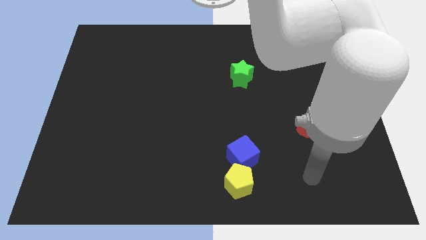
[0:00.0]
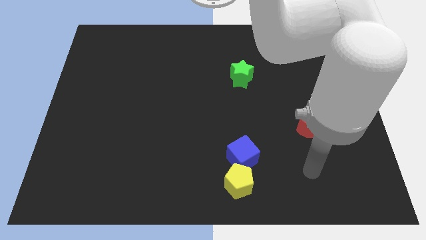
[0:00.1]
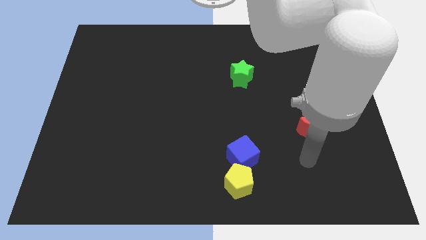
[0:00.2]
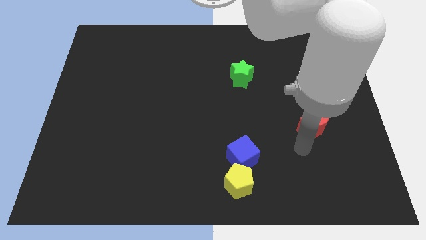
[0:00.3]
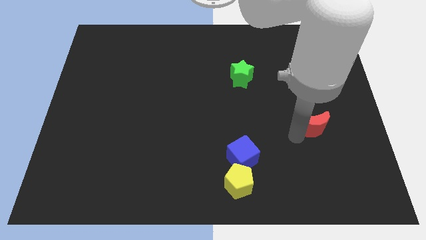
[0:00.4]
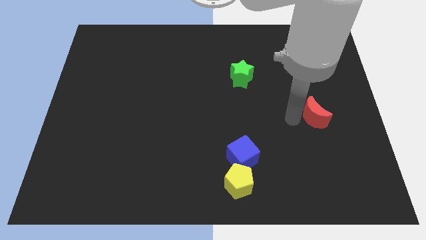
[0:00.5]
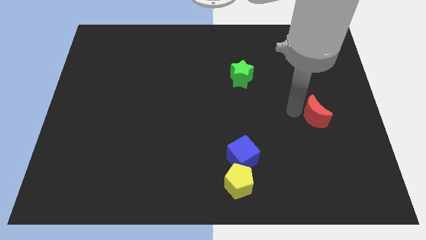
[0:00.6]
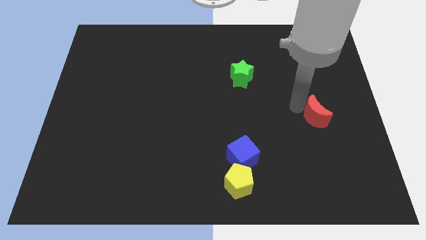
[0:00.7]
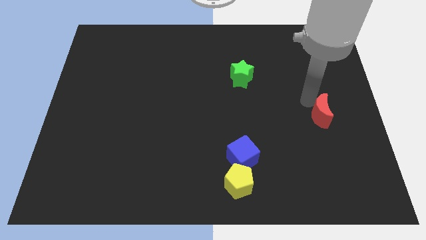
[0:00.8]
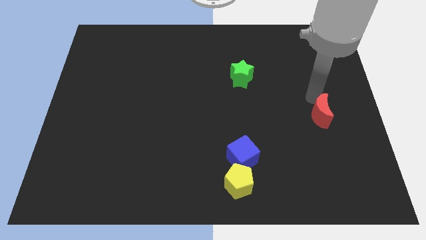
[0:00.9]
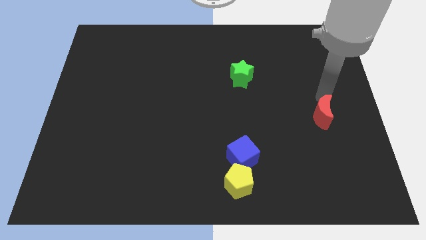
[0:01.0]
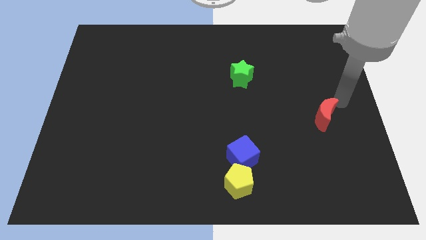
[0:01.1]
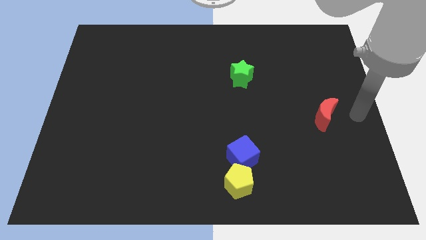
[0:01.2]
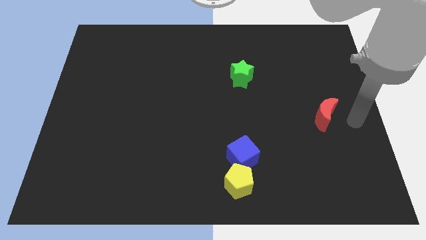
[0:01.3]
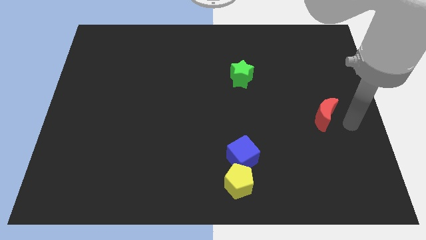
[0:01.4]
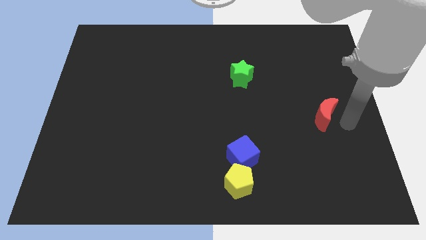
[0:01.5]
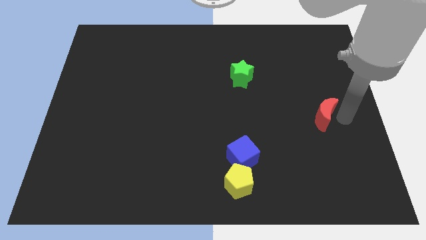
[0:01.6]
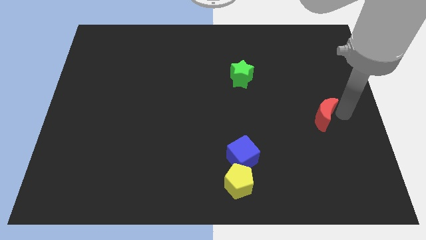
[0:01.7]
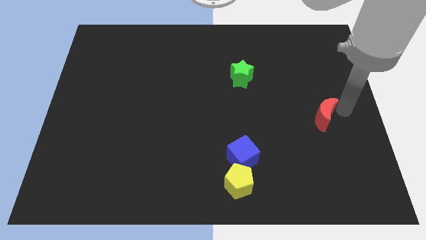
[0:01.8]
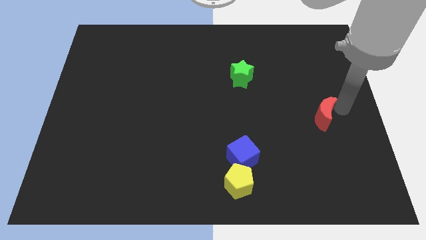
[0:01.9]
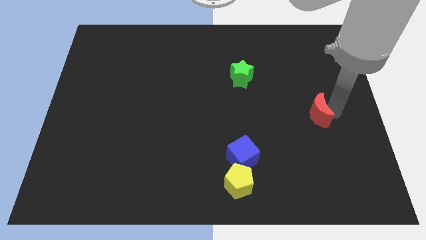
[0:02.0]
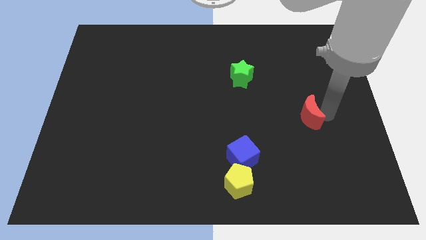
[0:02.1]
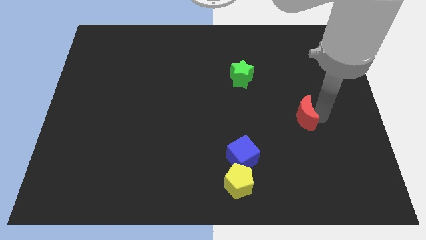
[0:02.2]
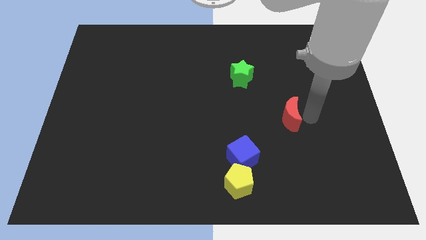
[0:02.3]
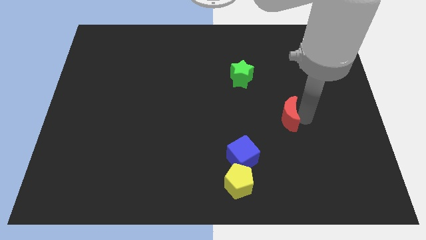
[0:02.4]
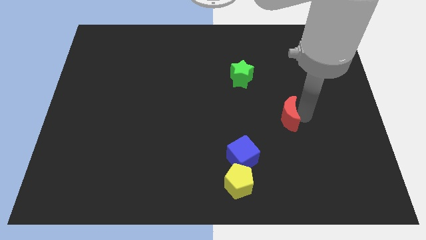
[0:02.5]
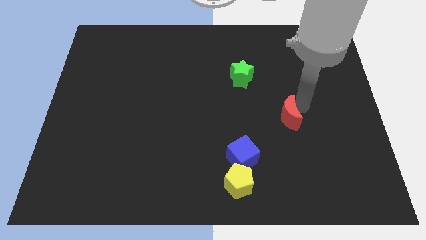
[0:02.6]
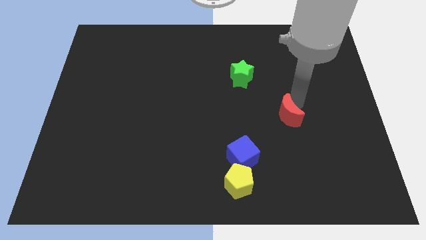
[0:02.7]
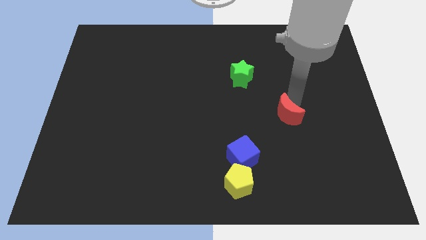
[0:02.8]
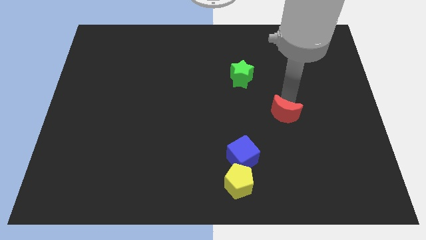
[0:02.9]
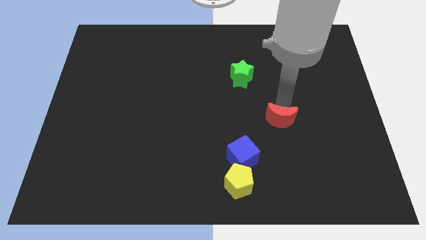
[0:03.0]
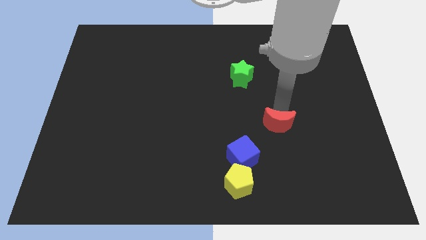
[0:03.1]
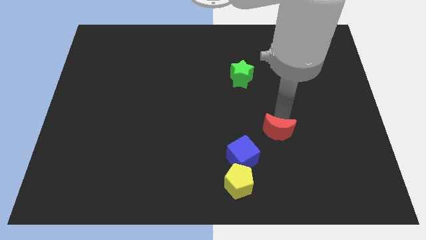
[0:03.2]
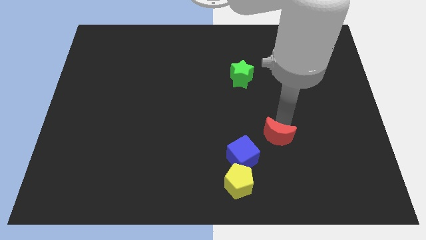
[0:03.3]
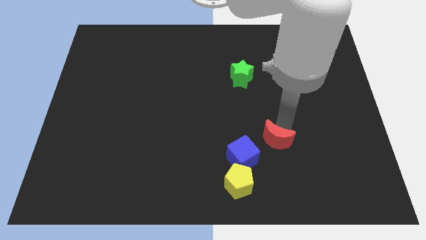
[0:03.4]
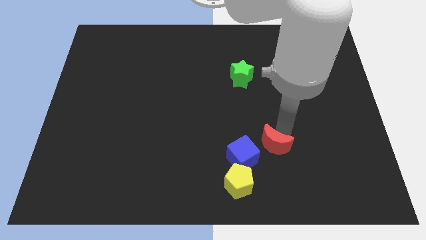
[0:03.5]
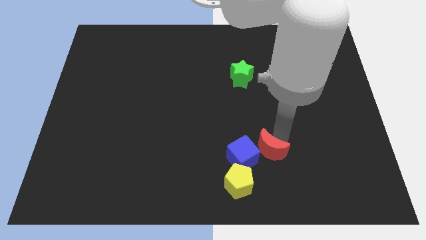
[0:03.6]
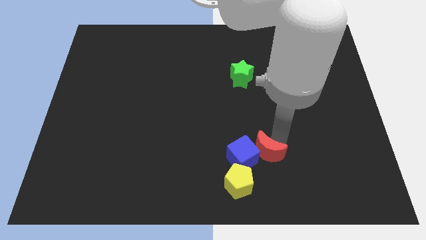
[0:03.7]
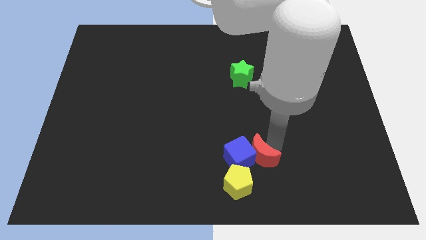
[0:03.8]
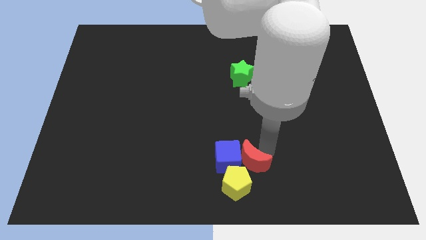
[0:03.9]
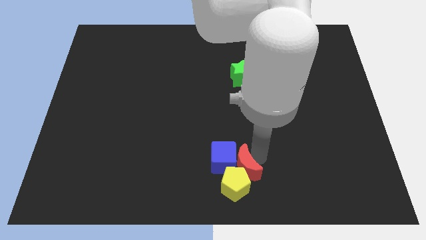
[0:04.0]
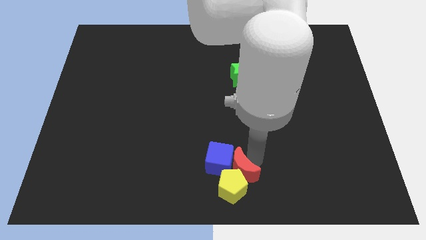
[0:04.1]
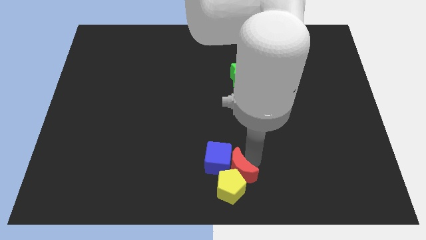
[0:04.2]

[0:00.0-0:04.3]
push the red block towards the yellow pentagon

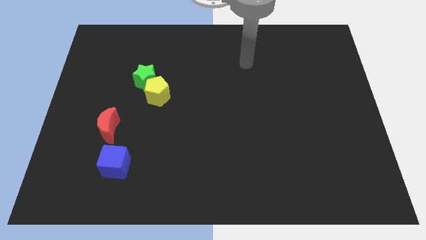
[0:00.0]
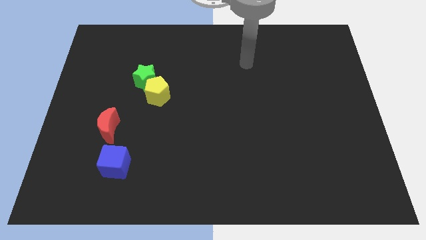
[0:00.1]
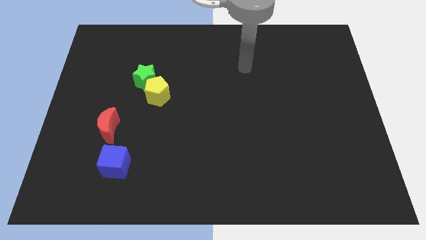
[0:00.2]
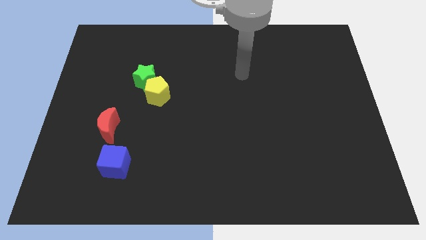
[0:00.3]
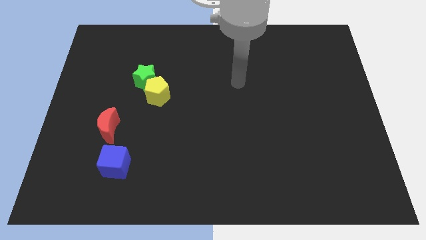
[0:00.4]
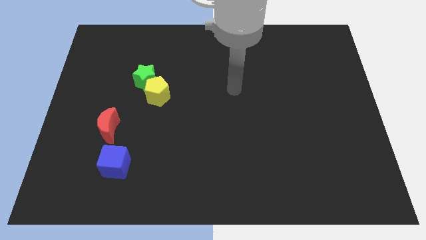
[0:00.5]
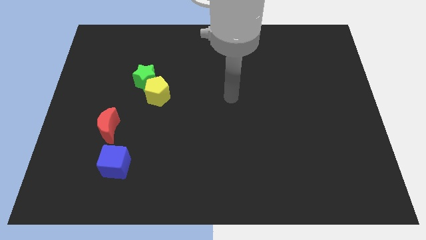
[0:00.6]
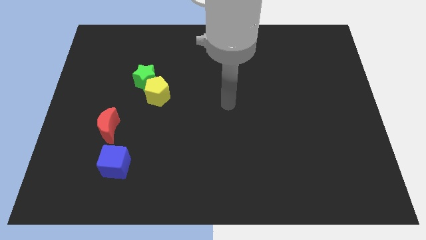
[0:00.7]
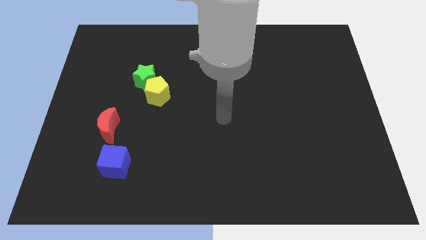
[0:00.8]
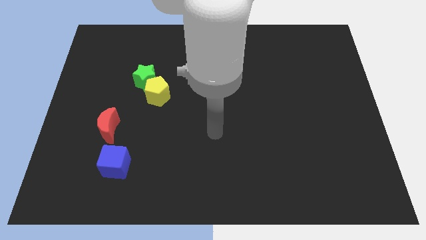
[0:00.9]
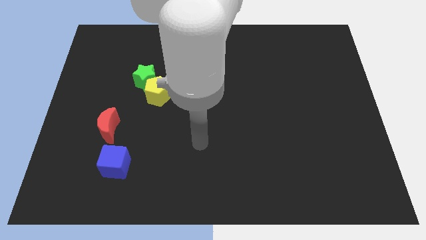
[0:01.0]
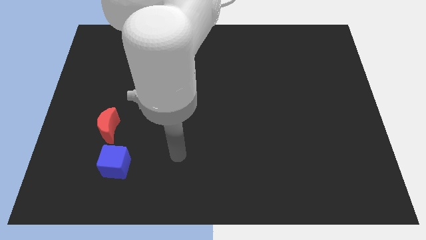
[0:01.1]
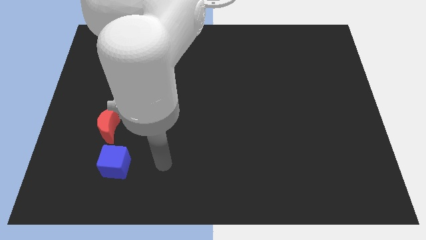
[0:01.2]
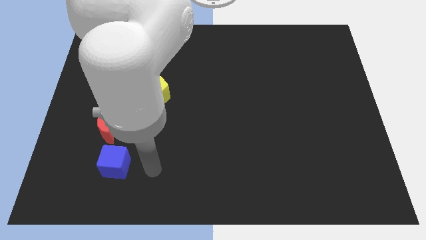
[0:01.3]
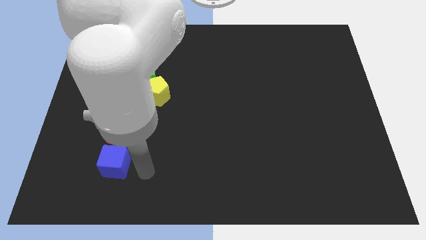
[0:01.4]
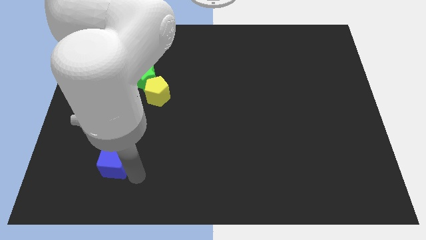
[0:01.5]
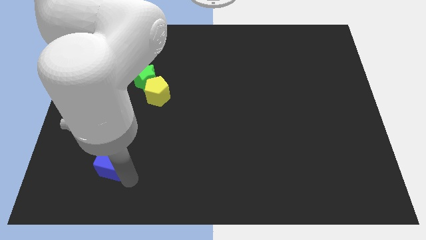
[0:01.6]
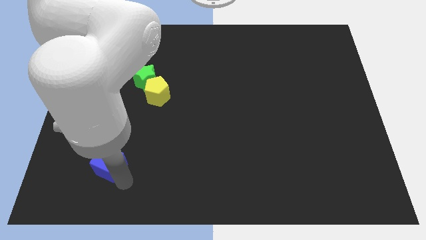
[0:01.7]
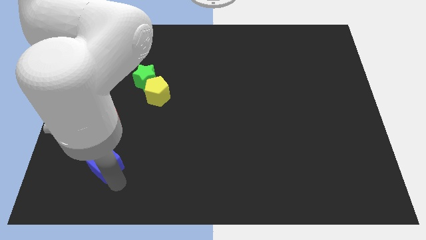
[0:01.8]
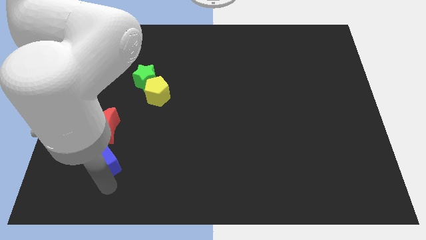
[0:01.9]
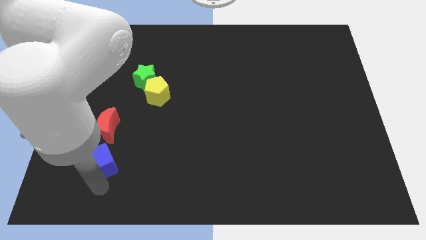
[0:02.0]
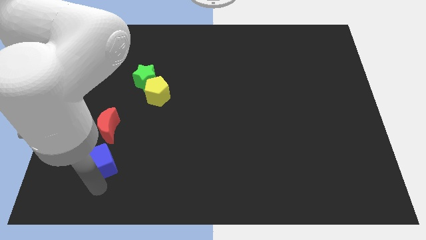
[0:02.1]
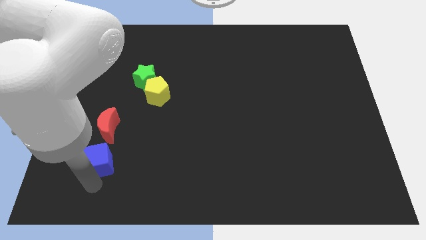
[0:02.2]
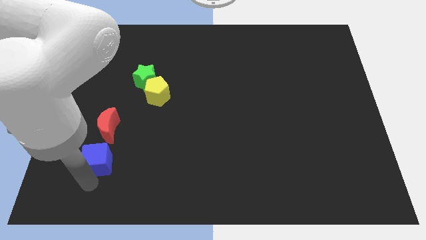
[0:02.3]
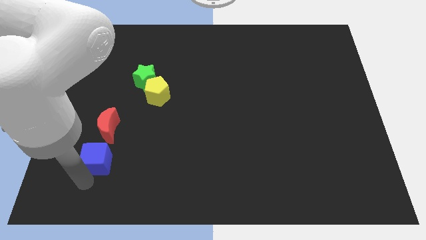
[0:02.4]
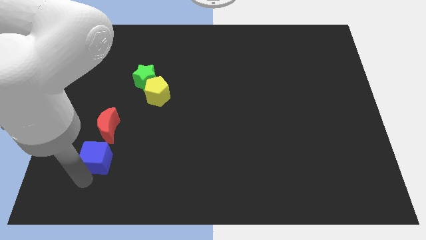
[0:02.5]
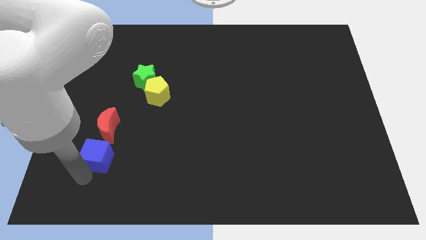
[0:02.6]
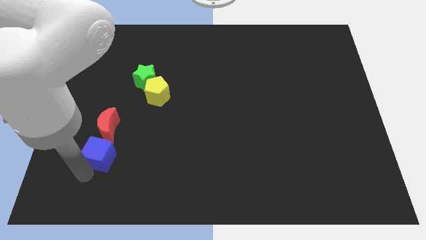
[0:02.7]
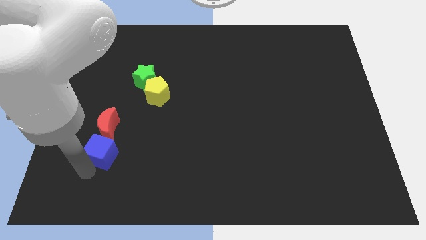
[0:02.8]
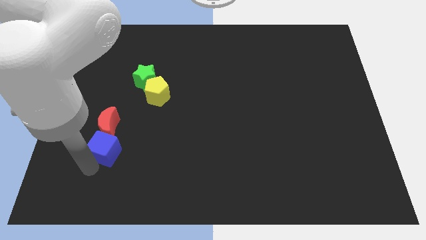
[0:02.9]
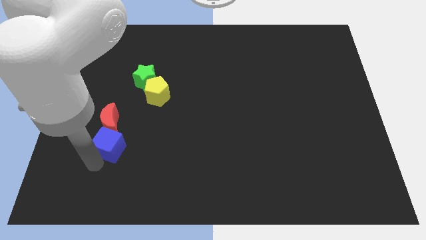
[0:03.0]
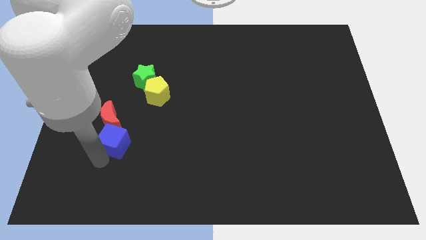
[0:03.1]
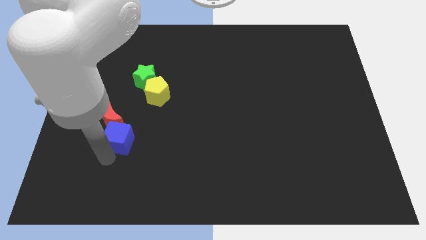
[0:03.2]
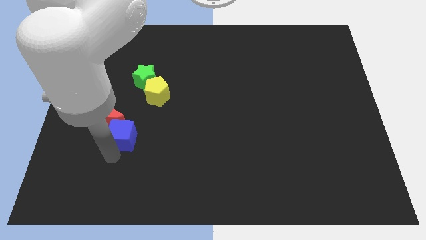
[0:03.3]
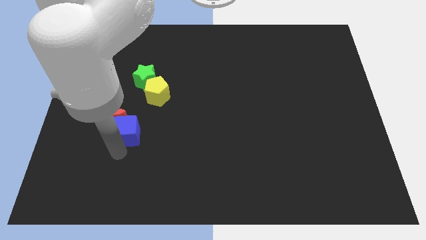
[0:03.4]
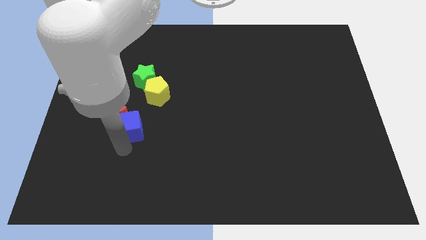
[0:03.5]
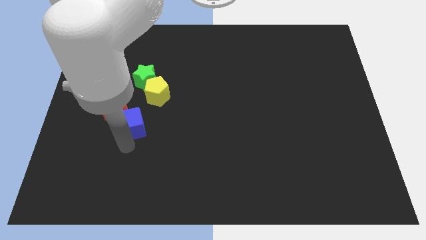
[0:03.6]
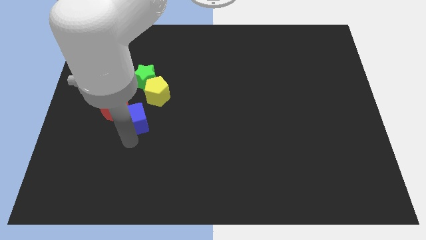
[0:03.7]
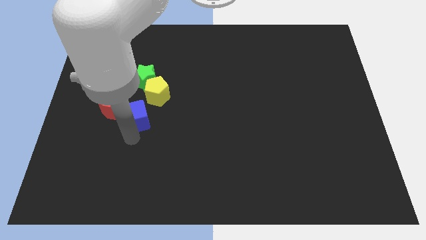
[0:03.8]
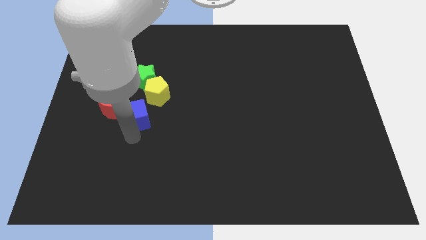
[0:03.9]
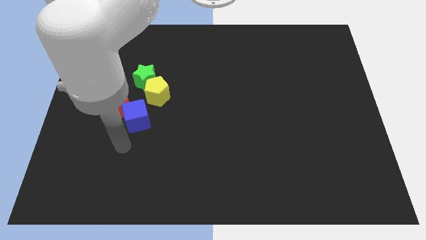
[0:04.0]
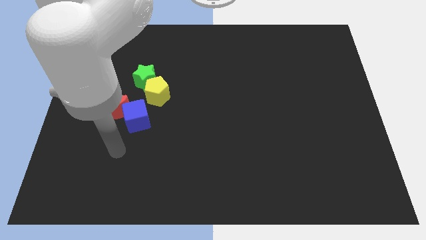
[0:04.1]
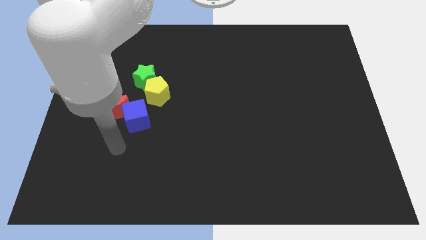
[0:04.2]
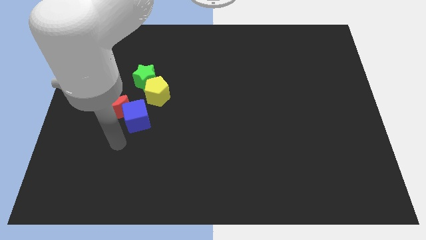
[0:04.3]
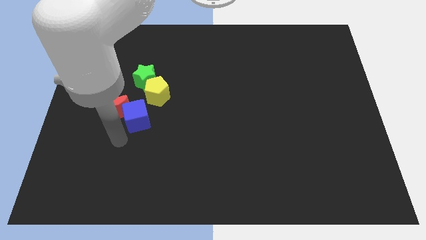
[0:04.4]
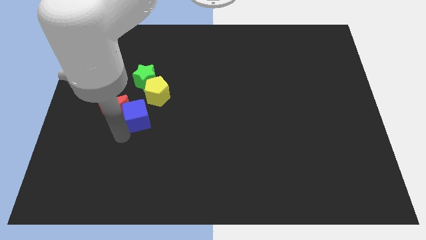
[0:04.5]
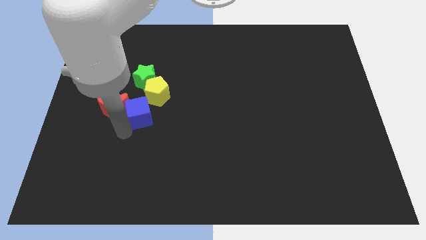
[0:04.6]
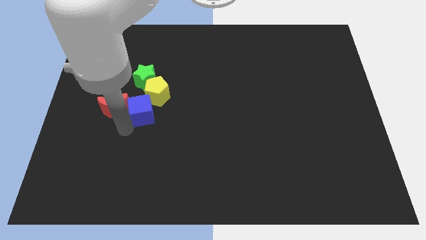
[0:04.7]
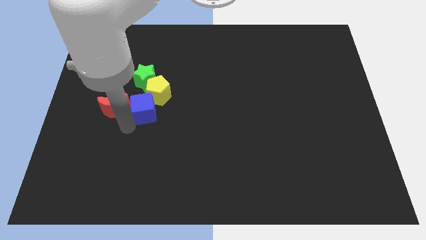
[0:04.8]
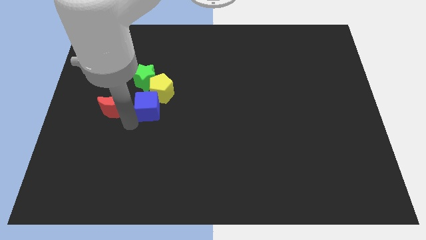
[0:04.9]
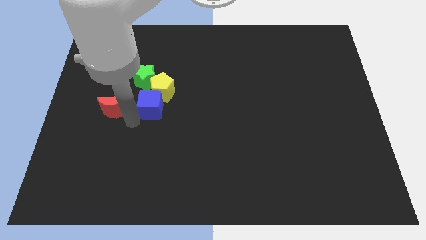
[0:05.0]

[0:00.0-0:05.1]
put the cube next to the yellow block
